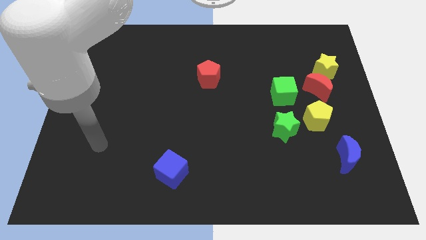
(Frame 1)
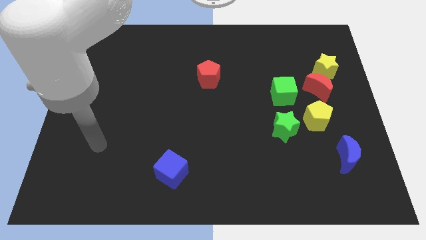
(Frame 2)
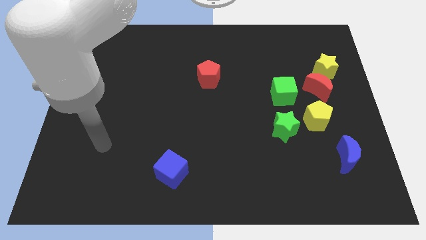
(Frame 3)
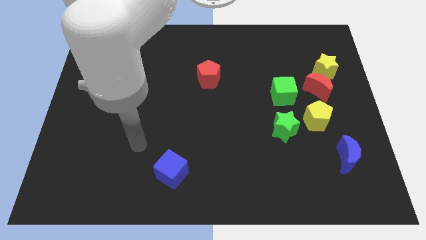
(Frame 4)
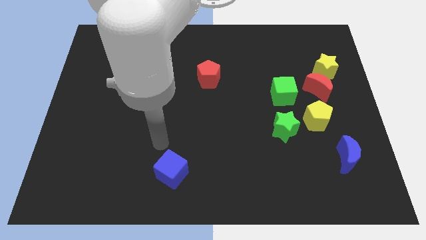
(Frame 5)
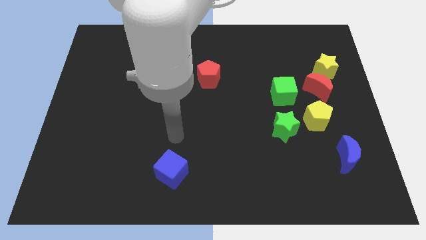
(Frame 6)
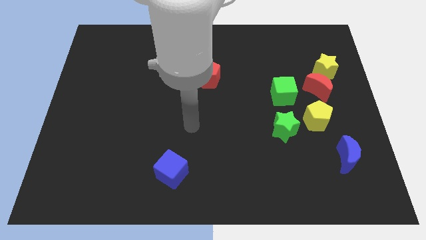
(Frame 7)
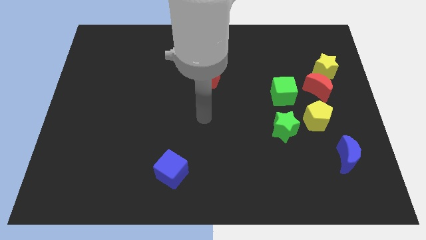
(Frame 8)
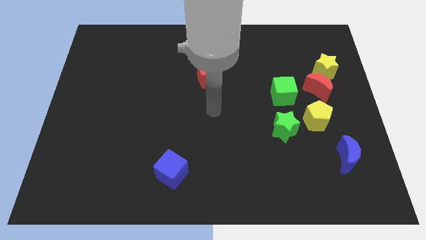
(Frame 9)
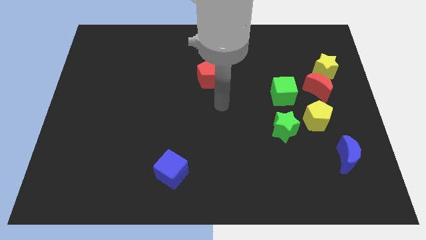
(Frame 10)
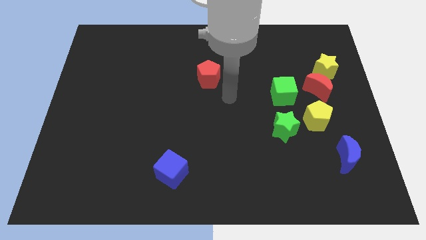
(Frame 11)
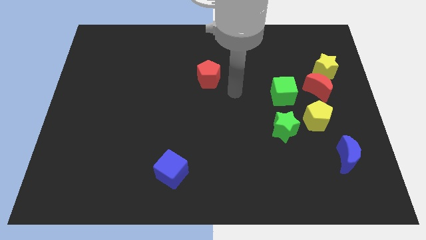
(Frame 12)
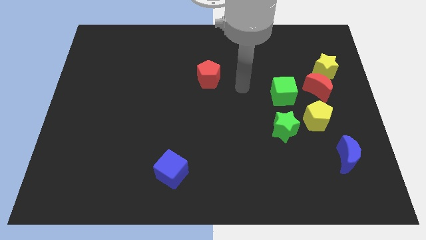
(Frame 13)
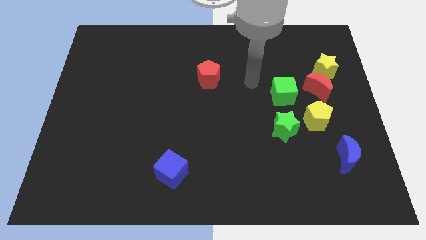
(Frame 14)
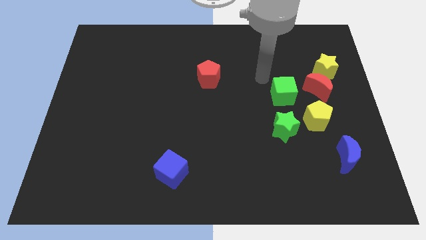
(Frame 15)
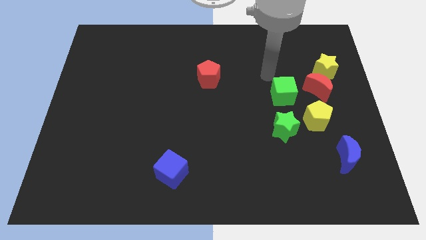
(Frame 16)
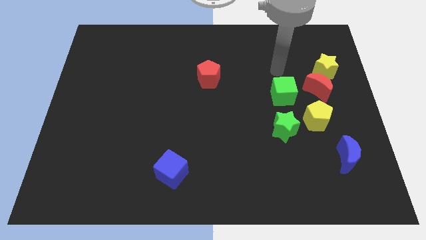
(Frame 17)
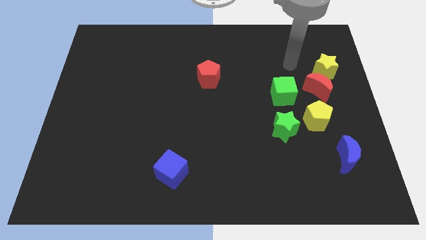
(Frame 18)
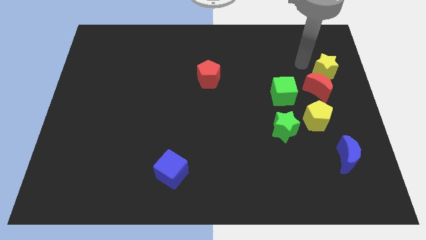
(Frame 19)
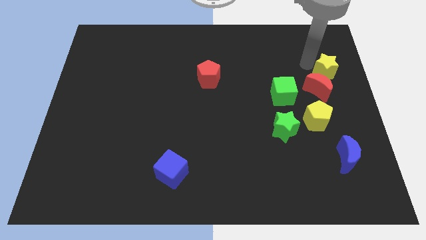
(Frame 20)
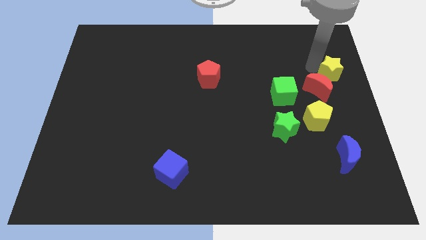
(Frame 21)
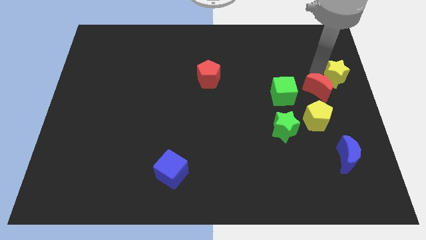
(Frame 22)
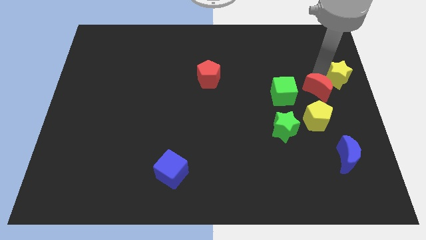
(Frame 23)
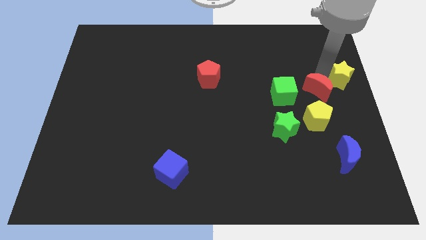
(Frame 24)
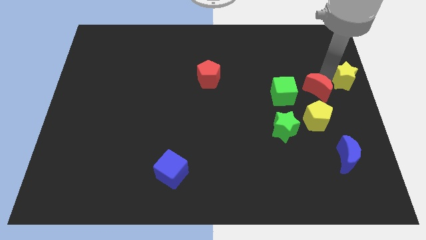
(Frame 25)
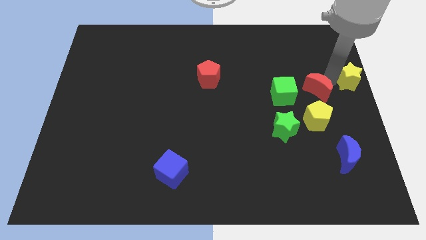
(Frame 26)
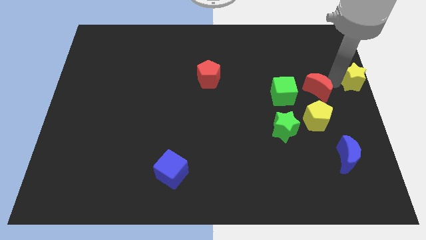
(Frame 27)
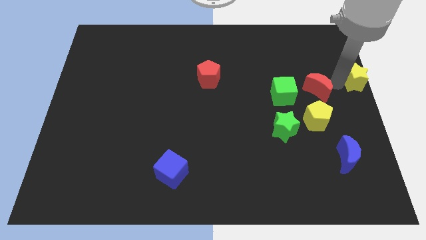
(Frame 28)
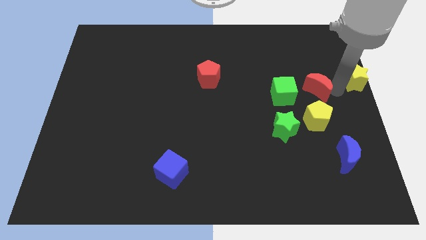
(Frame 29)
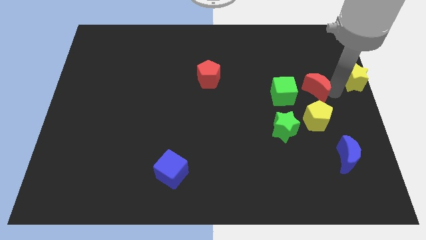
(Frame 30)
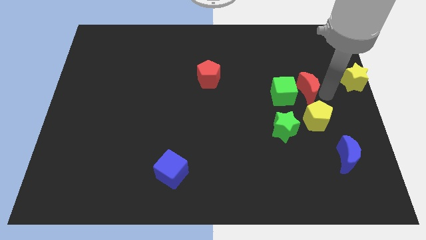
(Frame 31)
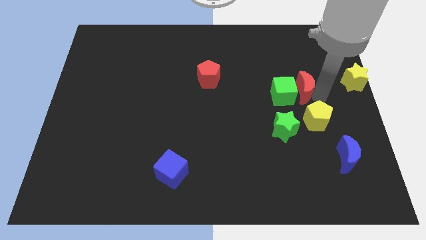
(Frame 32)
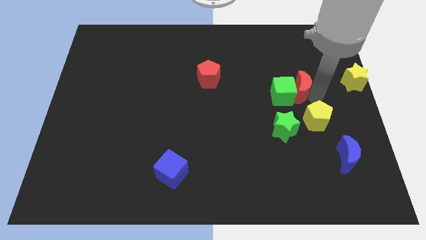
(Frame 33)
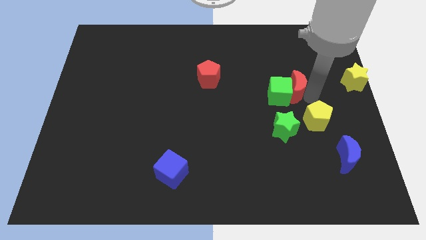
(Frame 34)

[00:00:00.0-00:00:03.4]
put the red moon next to the green cube

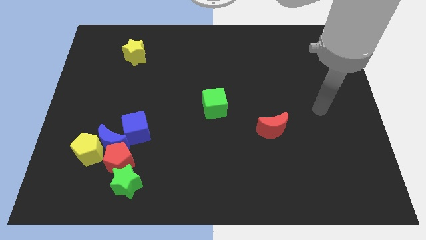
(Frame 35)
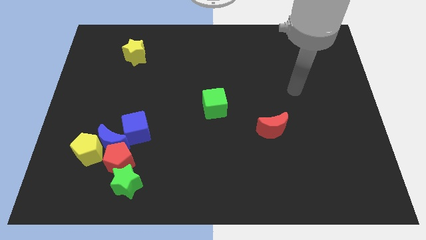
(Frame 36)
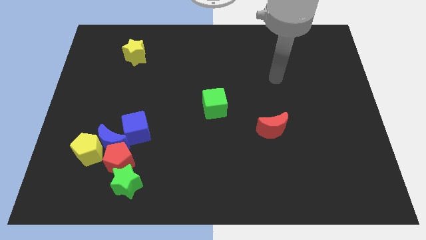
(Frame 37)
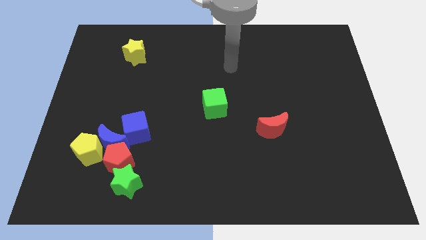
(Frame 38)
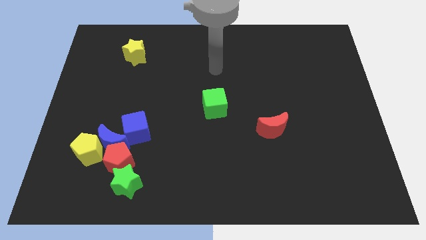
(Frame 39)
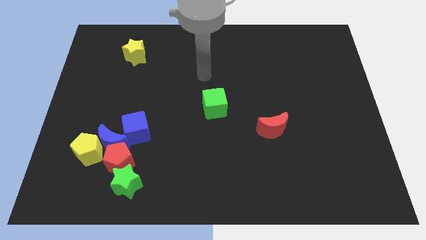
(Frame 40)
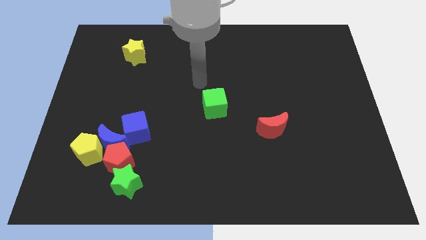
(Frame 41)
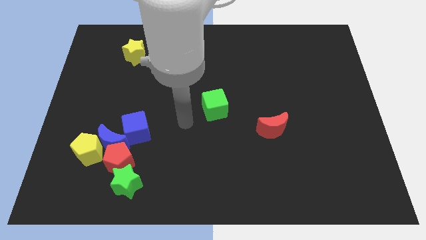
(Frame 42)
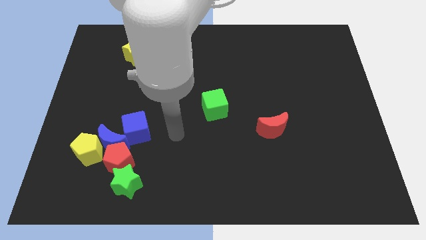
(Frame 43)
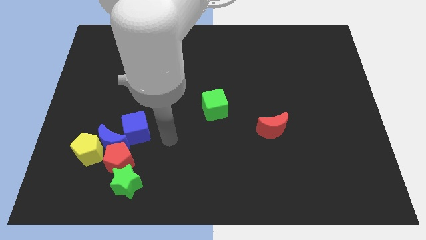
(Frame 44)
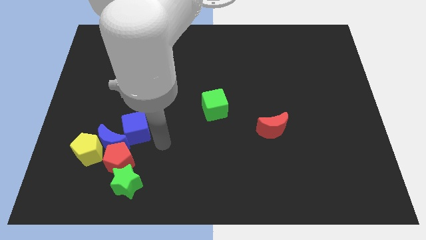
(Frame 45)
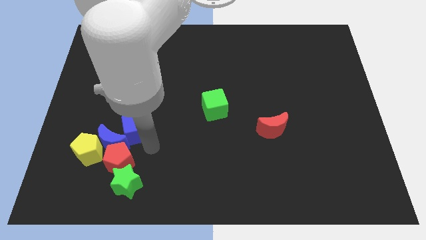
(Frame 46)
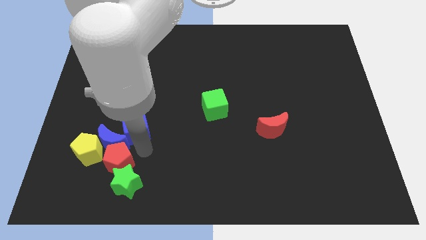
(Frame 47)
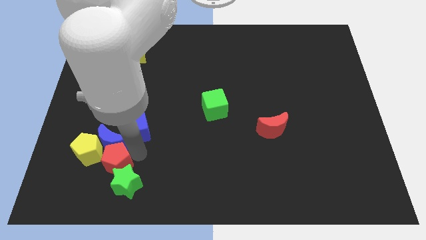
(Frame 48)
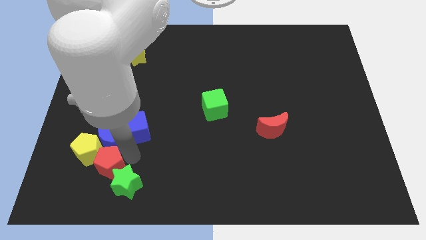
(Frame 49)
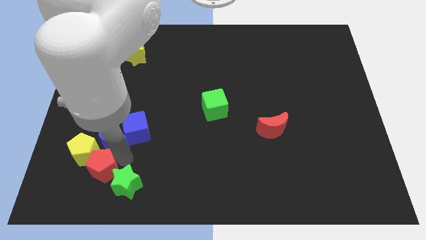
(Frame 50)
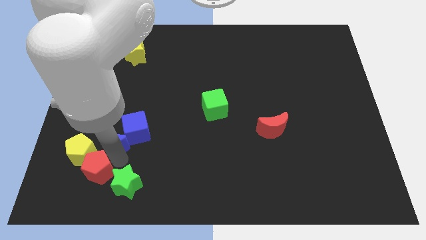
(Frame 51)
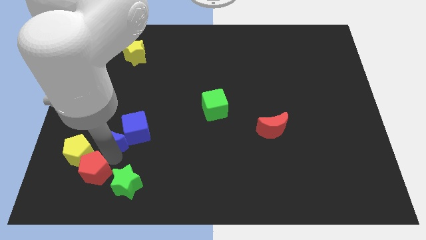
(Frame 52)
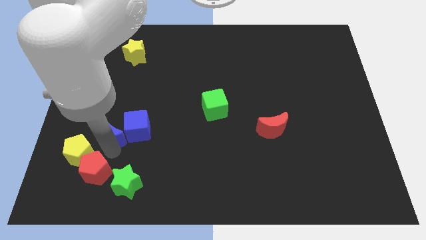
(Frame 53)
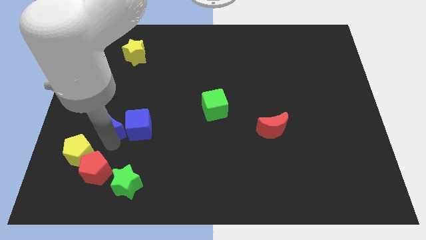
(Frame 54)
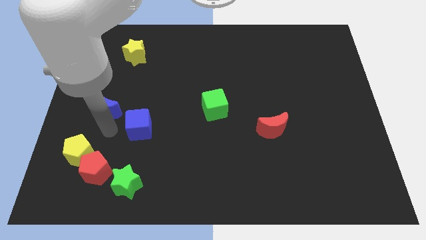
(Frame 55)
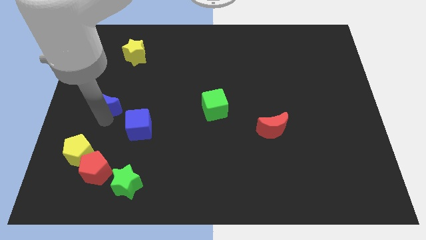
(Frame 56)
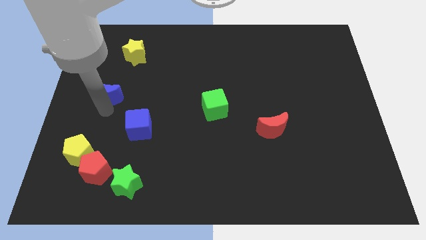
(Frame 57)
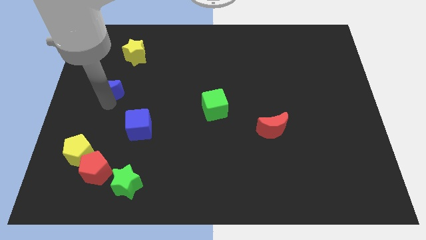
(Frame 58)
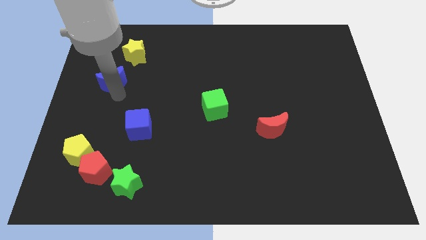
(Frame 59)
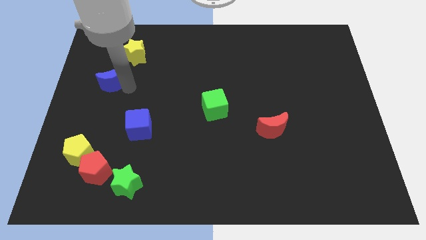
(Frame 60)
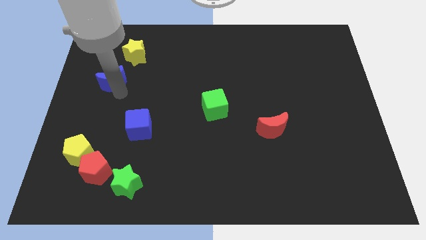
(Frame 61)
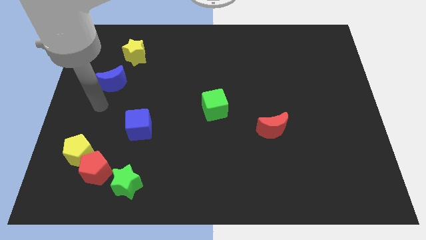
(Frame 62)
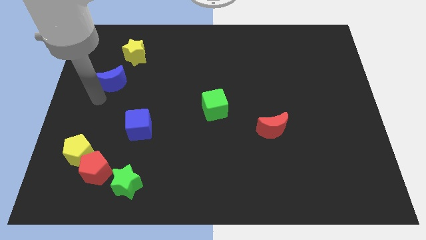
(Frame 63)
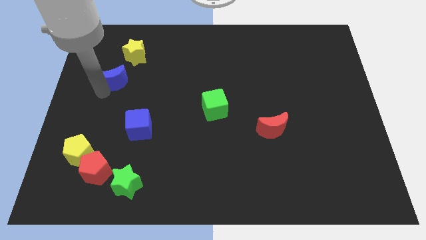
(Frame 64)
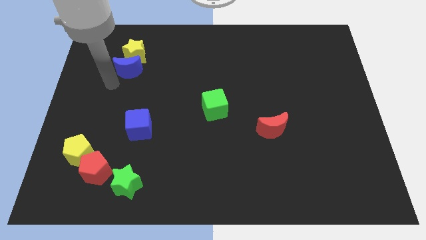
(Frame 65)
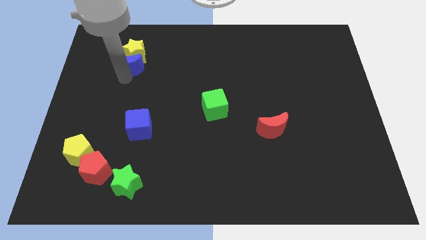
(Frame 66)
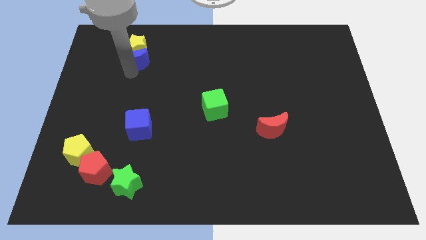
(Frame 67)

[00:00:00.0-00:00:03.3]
put the blue moon next to the yellow star

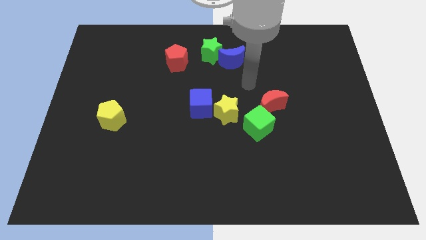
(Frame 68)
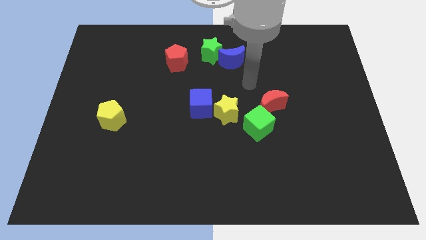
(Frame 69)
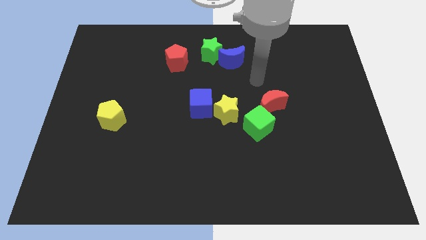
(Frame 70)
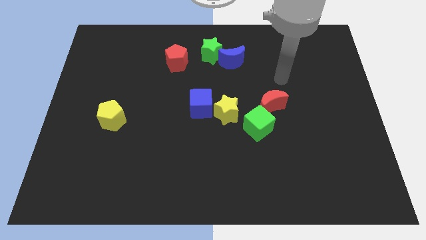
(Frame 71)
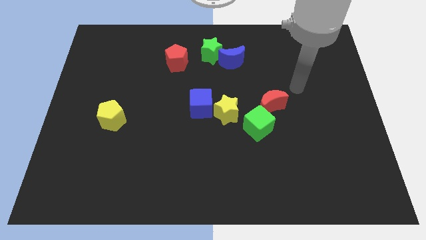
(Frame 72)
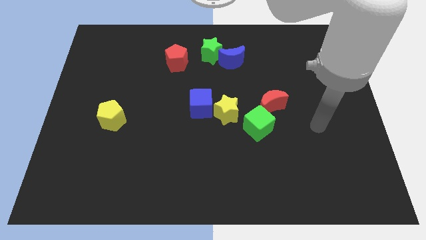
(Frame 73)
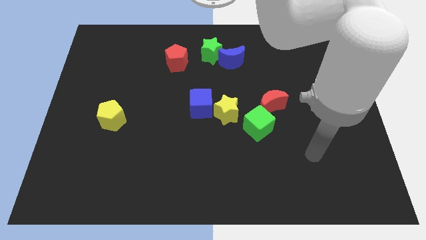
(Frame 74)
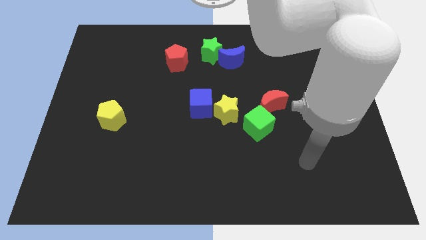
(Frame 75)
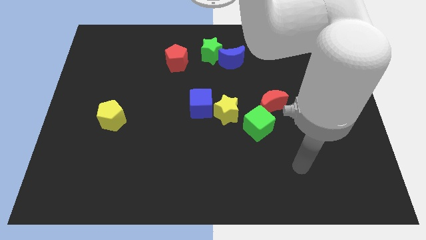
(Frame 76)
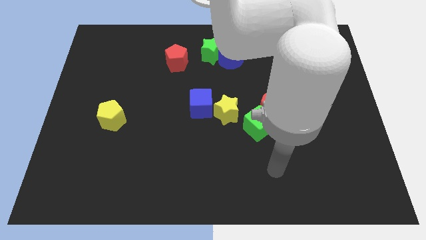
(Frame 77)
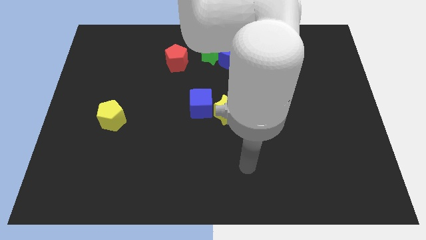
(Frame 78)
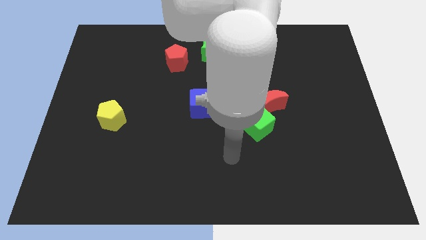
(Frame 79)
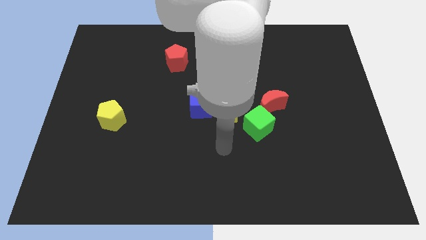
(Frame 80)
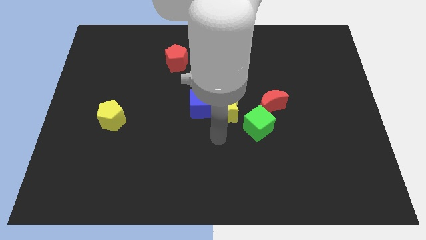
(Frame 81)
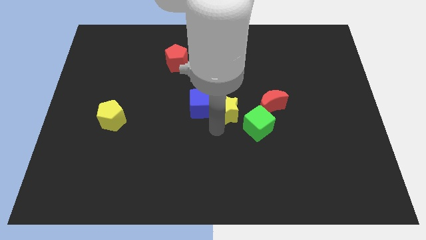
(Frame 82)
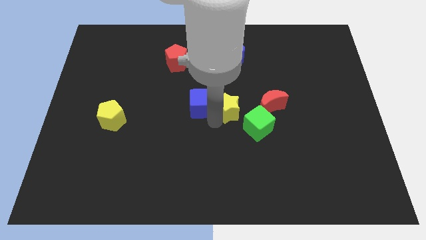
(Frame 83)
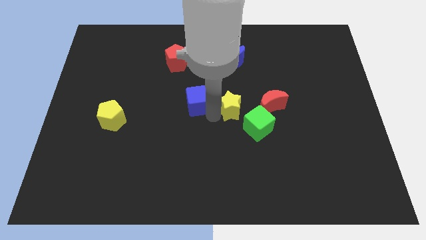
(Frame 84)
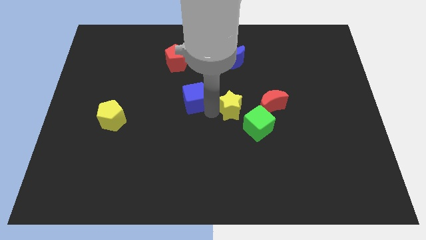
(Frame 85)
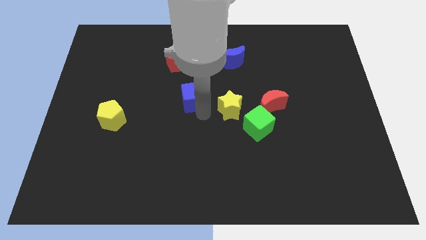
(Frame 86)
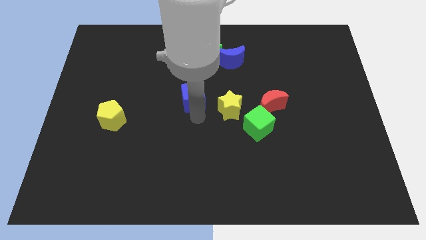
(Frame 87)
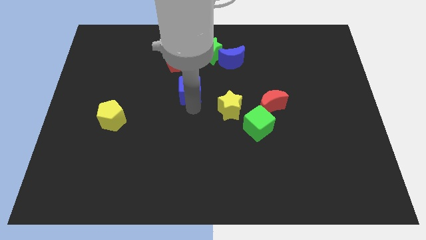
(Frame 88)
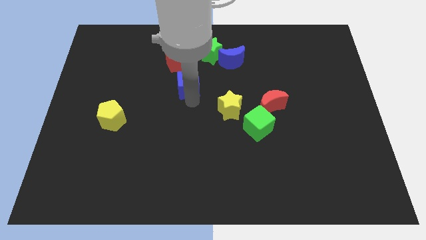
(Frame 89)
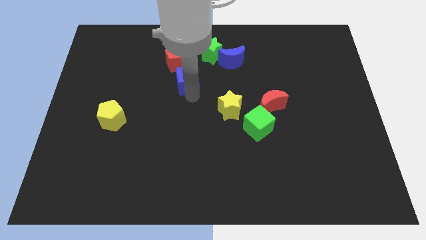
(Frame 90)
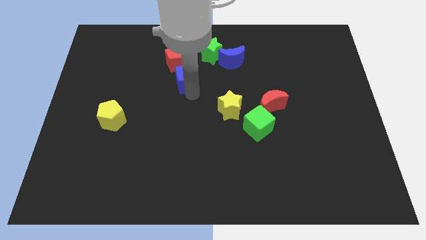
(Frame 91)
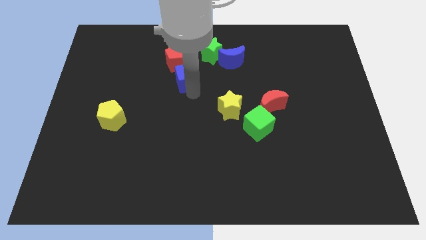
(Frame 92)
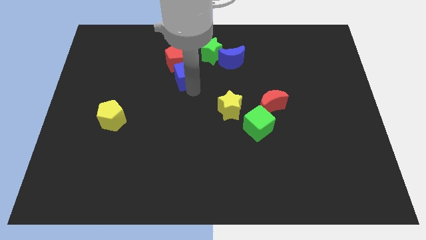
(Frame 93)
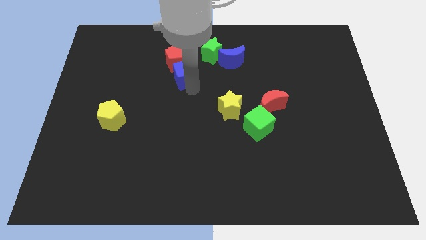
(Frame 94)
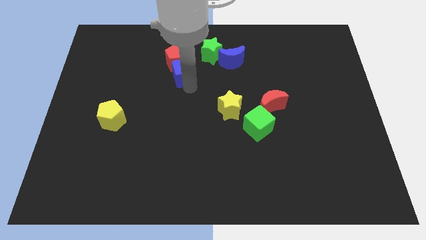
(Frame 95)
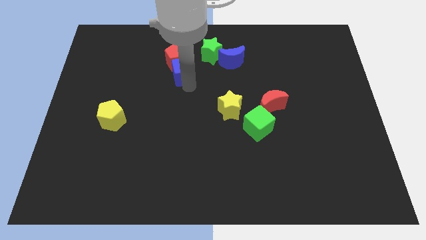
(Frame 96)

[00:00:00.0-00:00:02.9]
move the blue cube to the red pentagon
